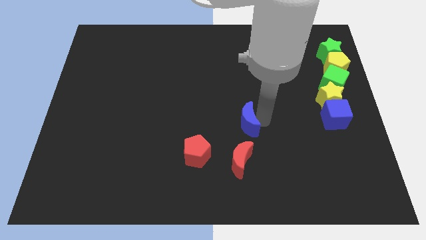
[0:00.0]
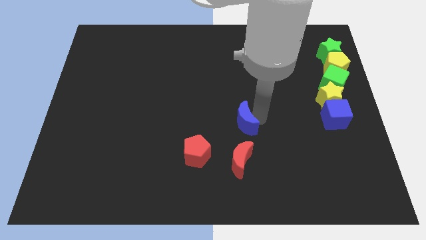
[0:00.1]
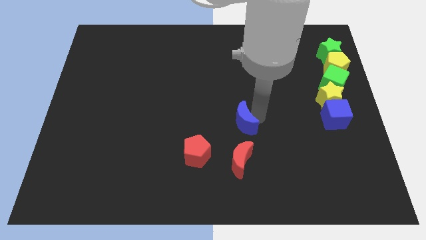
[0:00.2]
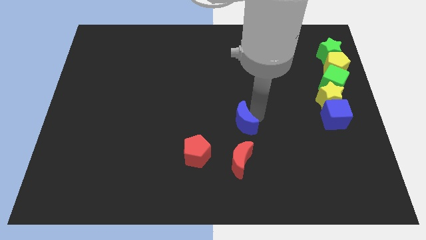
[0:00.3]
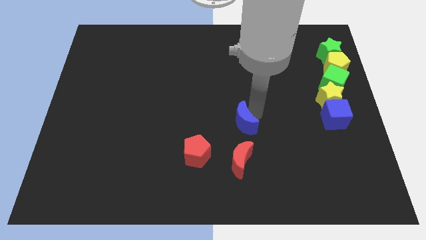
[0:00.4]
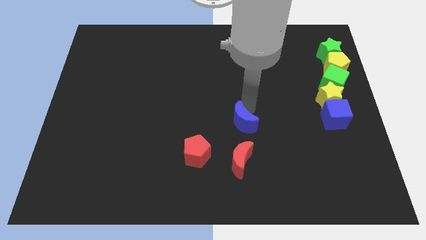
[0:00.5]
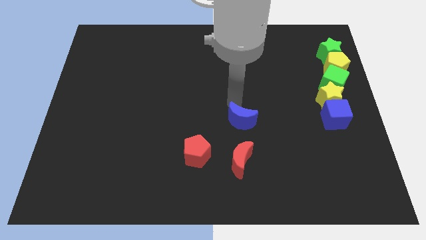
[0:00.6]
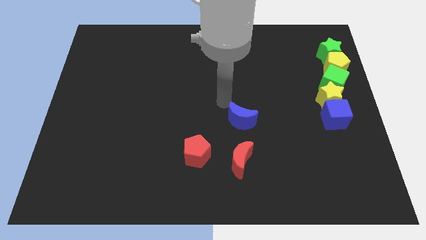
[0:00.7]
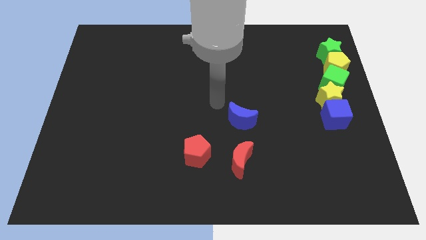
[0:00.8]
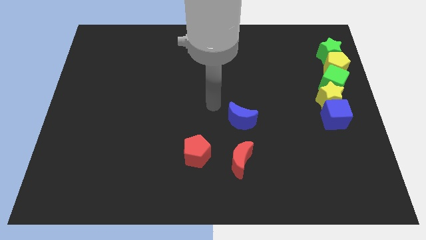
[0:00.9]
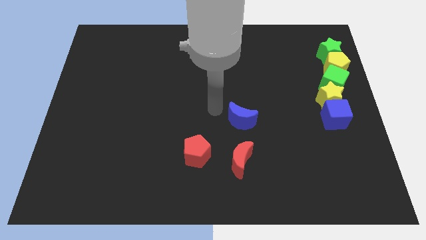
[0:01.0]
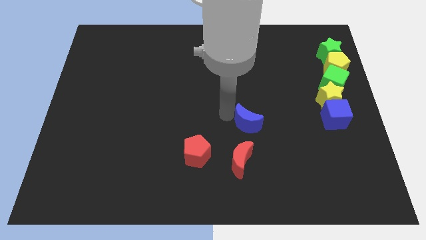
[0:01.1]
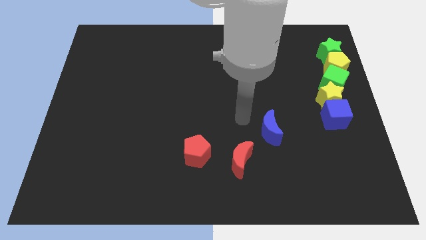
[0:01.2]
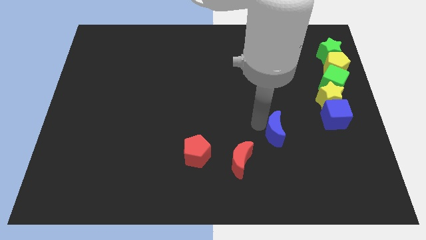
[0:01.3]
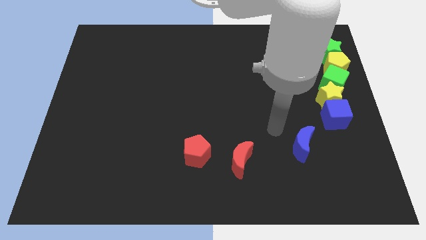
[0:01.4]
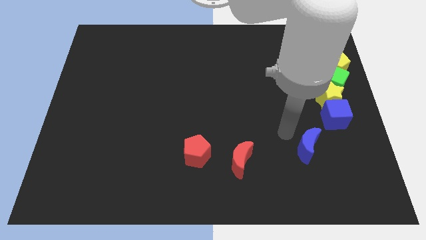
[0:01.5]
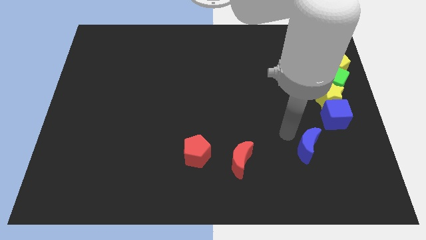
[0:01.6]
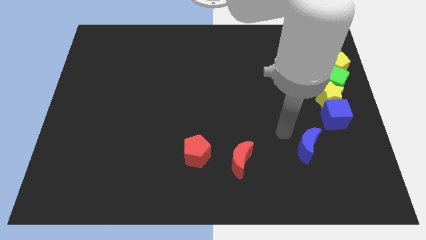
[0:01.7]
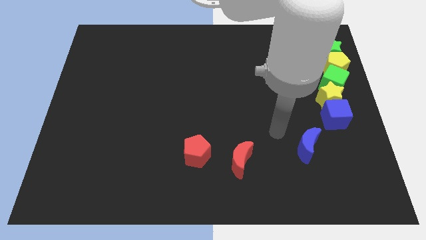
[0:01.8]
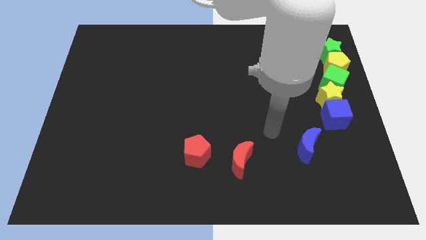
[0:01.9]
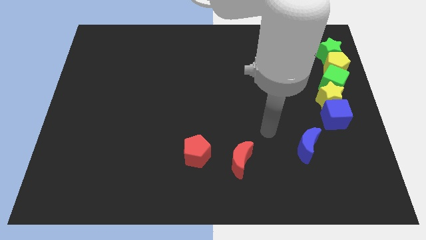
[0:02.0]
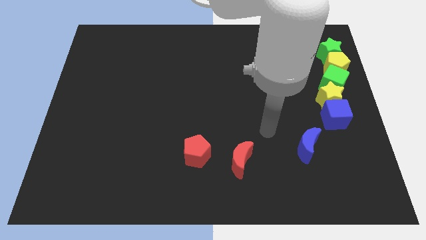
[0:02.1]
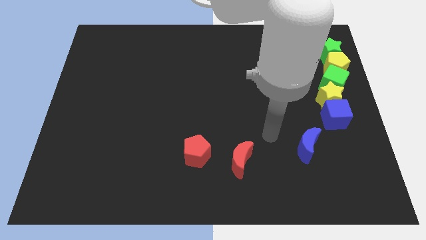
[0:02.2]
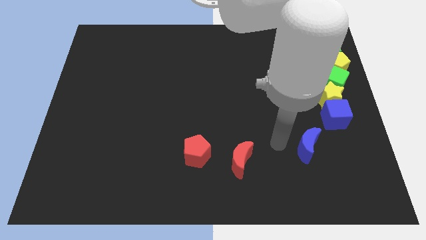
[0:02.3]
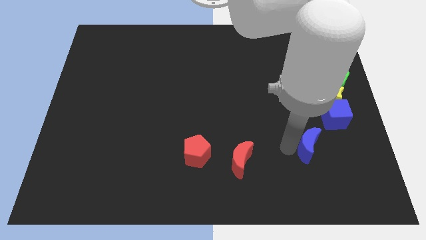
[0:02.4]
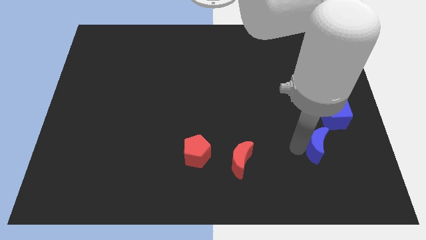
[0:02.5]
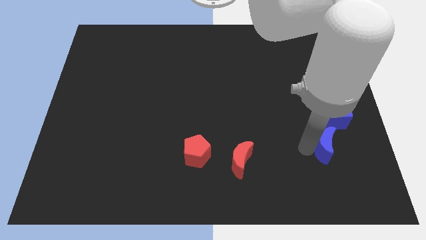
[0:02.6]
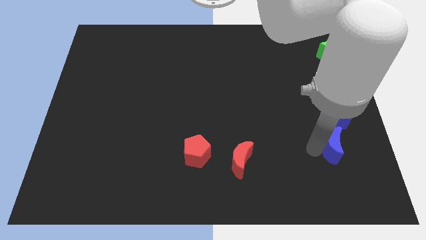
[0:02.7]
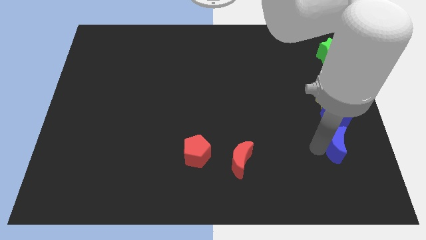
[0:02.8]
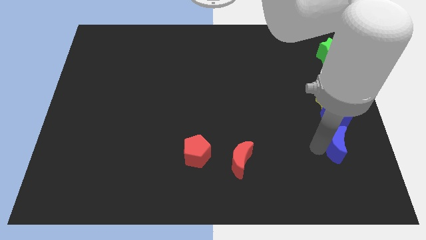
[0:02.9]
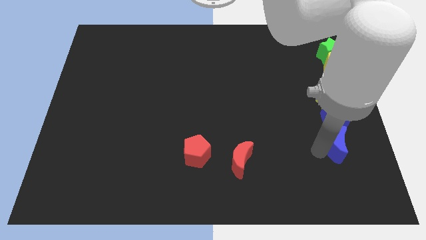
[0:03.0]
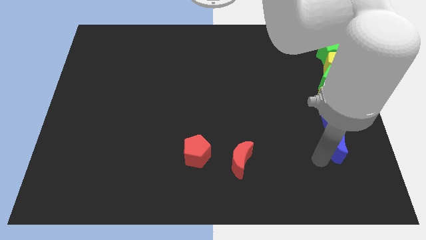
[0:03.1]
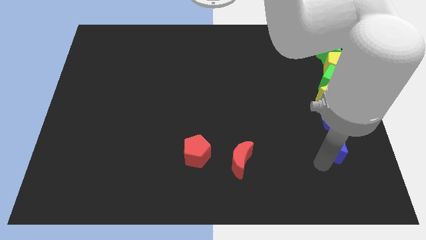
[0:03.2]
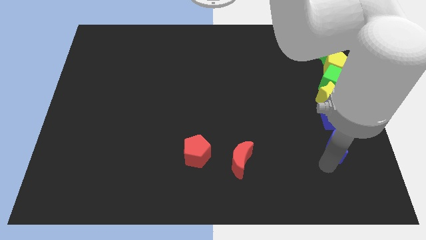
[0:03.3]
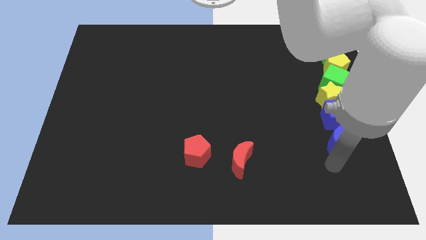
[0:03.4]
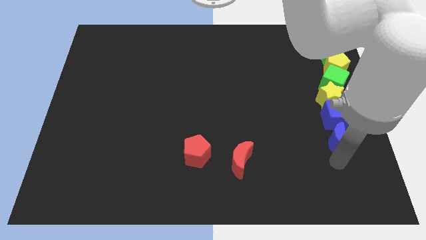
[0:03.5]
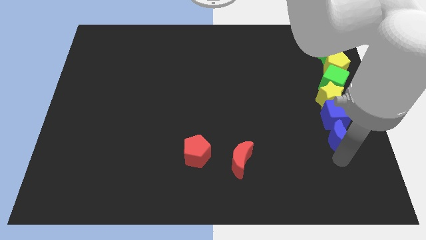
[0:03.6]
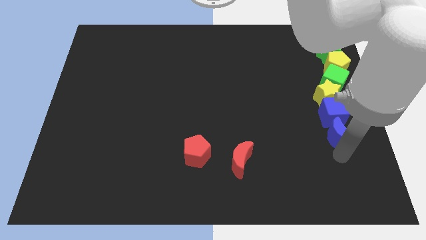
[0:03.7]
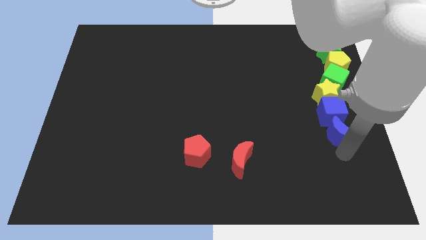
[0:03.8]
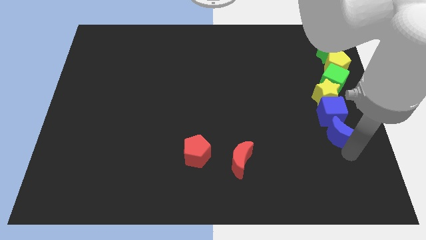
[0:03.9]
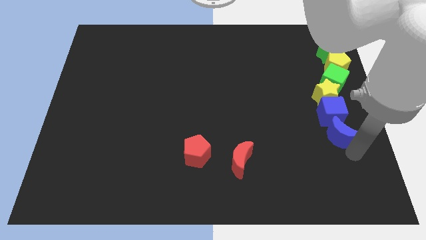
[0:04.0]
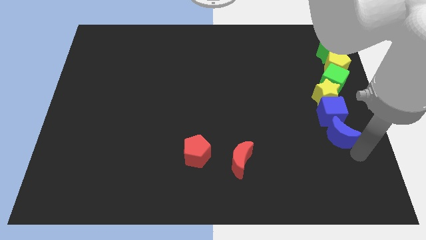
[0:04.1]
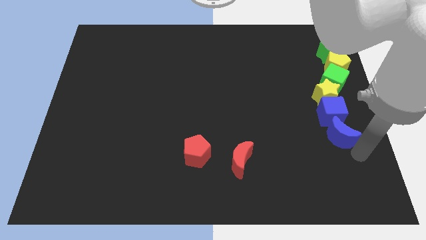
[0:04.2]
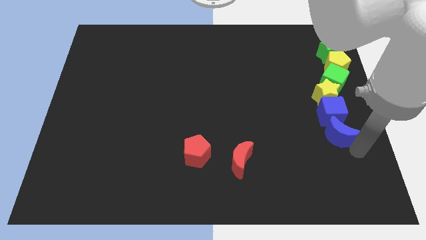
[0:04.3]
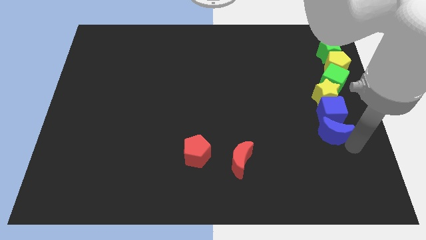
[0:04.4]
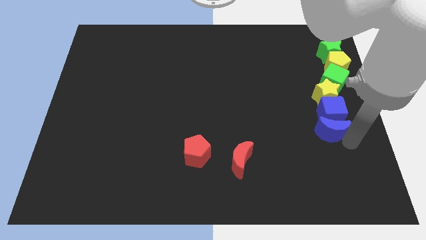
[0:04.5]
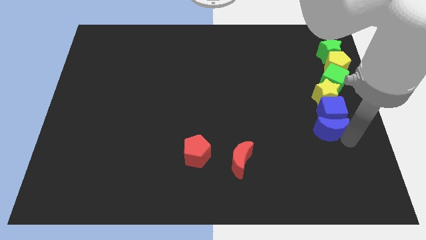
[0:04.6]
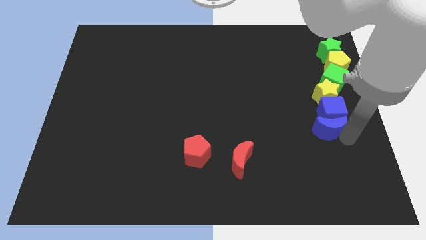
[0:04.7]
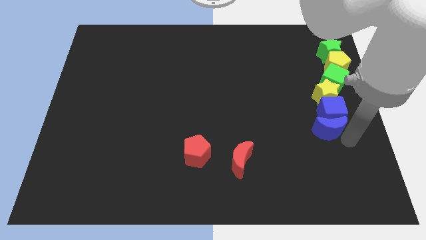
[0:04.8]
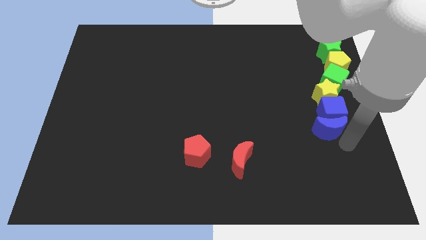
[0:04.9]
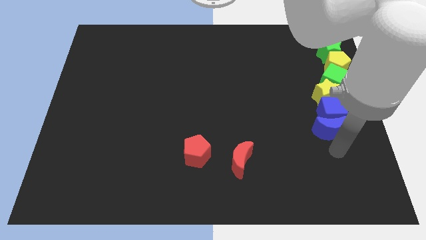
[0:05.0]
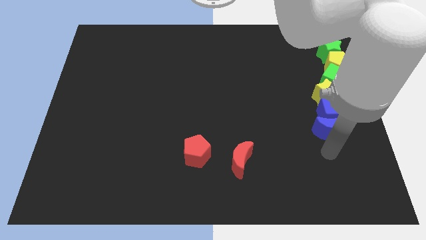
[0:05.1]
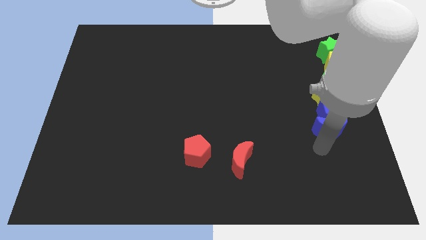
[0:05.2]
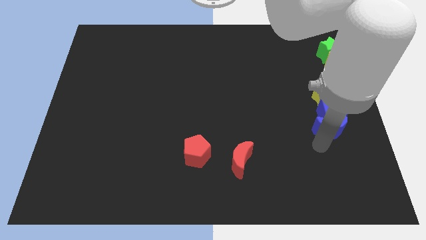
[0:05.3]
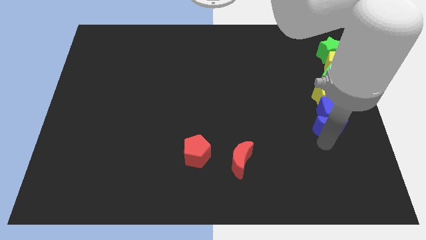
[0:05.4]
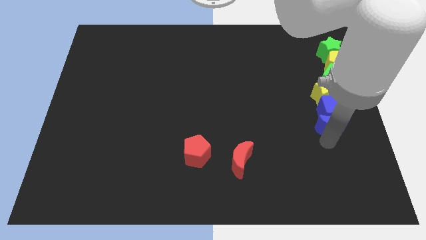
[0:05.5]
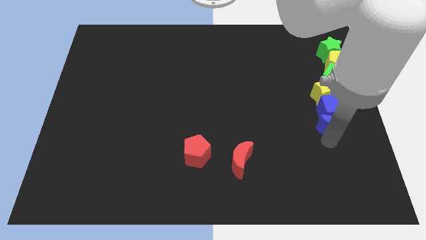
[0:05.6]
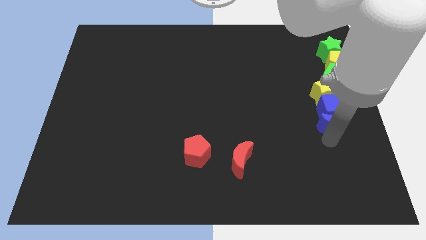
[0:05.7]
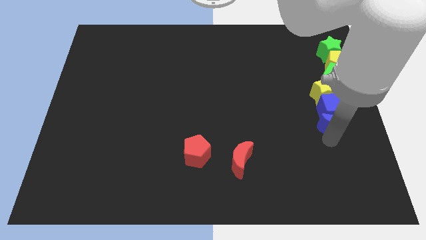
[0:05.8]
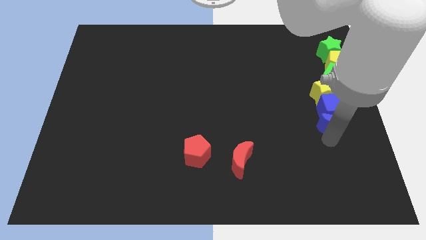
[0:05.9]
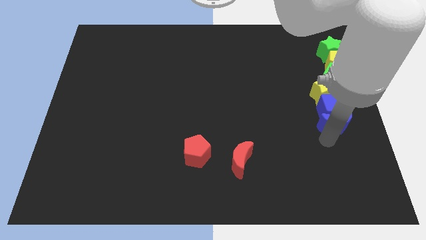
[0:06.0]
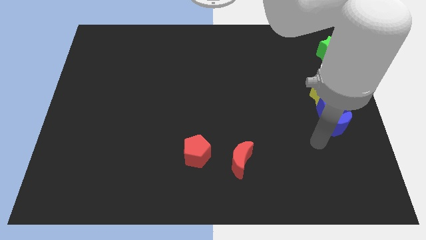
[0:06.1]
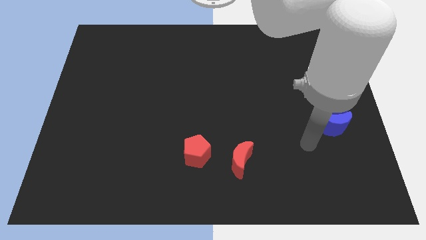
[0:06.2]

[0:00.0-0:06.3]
push the blue crescent into the blue cube

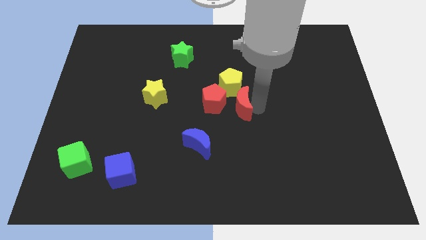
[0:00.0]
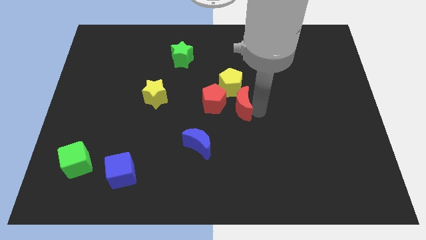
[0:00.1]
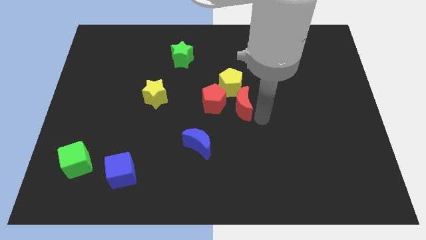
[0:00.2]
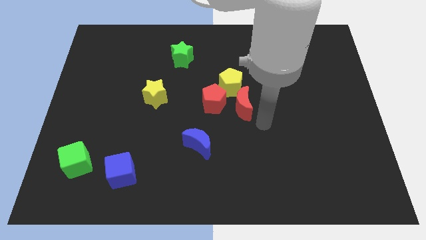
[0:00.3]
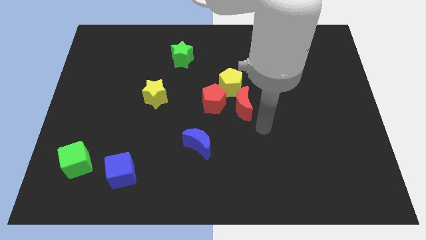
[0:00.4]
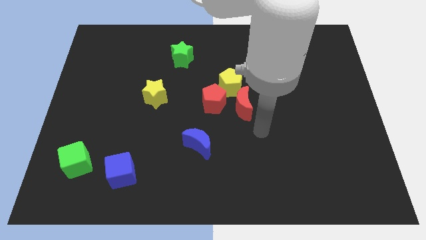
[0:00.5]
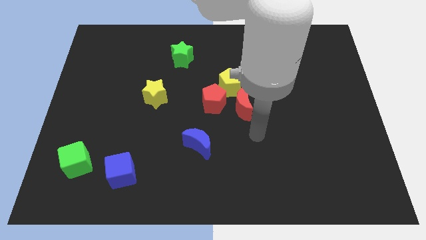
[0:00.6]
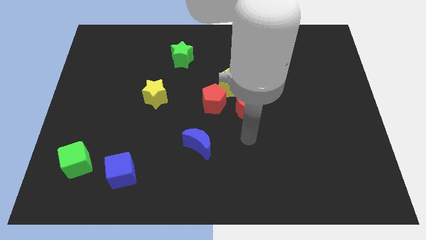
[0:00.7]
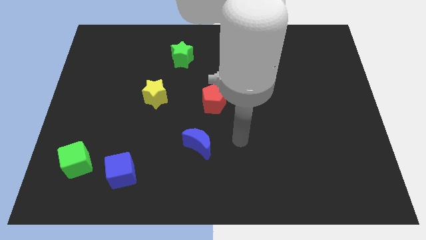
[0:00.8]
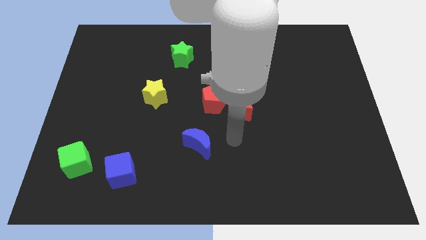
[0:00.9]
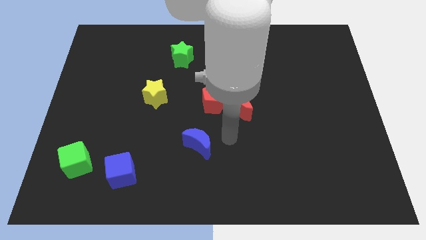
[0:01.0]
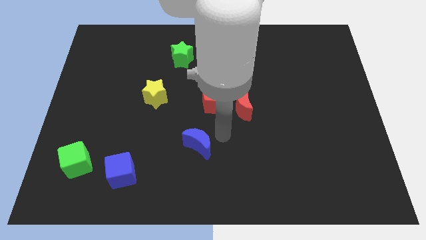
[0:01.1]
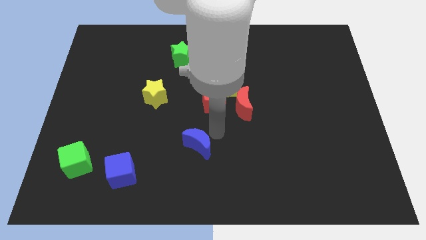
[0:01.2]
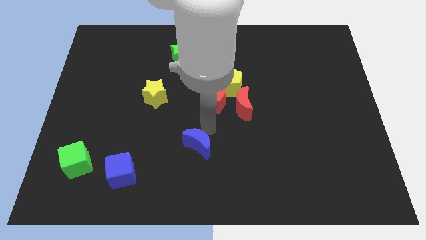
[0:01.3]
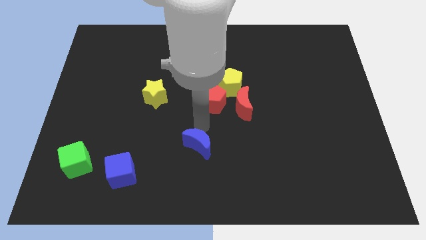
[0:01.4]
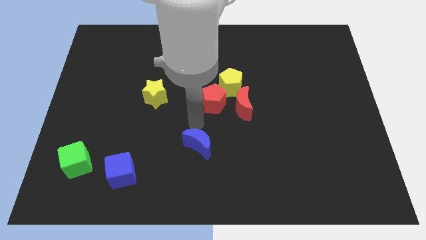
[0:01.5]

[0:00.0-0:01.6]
point your arm at the top of the blue crescent

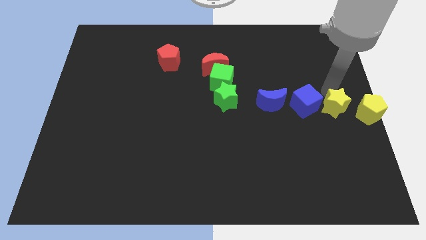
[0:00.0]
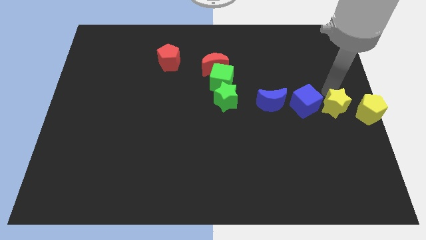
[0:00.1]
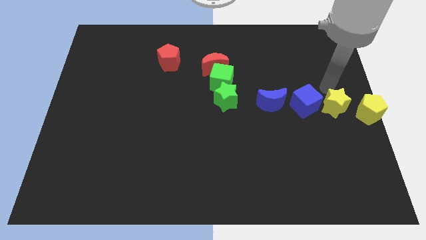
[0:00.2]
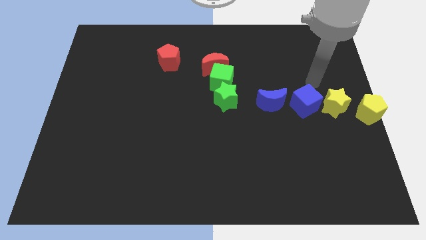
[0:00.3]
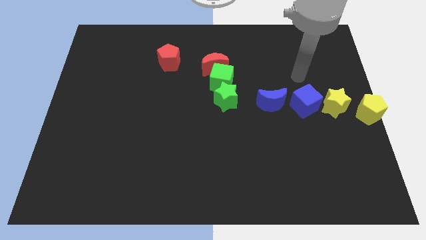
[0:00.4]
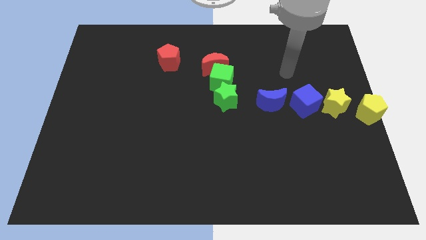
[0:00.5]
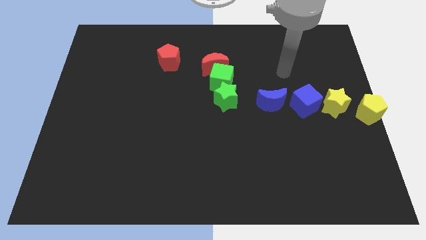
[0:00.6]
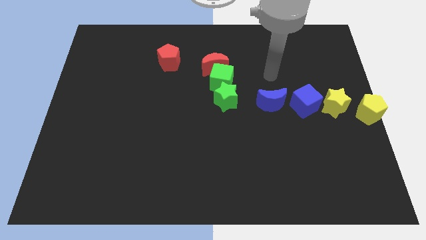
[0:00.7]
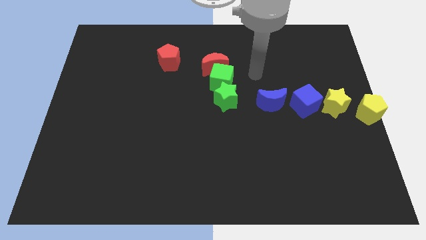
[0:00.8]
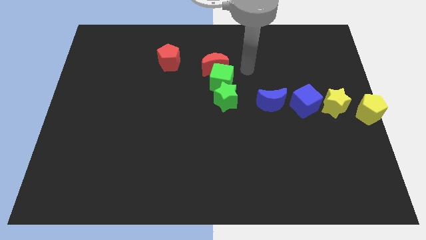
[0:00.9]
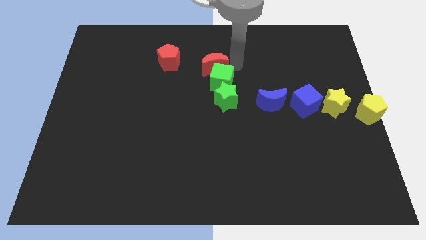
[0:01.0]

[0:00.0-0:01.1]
place your arm right to the red moon
